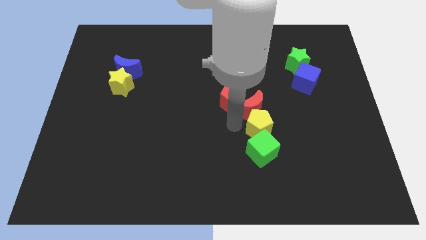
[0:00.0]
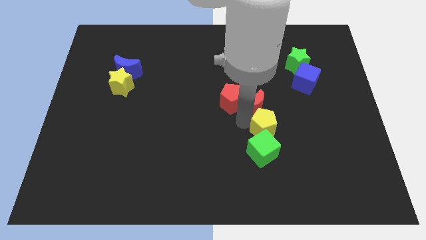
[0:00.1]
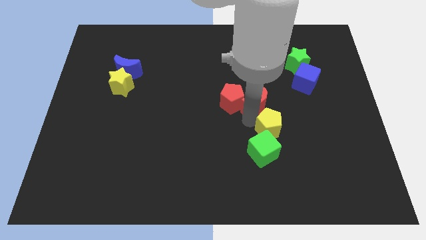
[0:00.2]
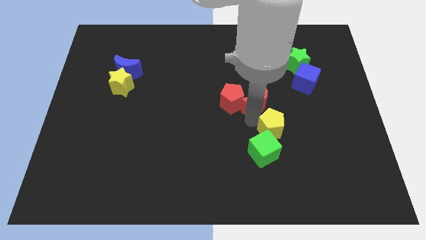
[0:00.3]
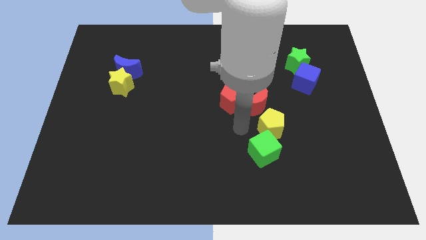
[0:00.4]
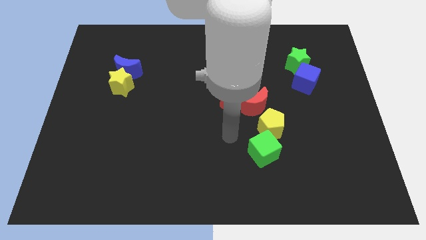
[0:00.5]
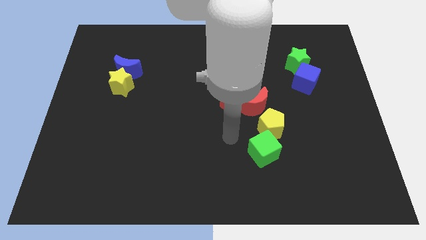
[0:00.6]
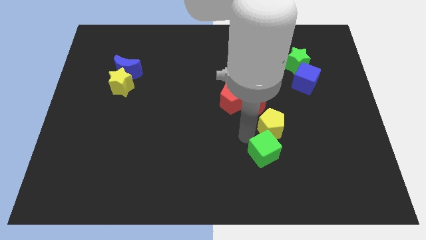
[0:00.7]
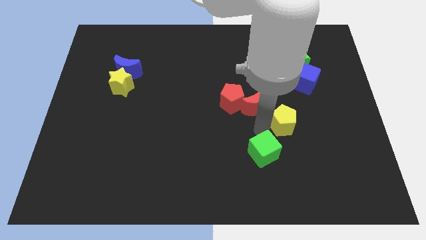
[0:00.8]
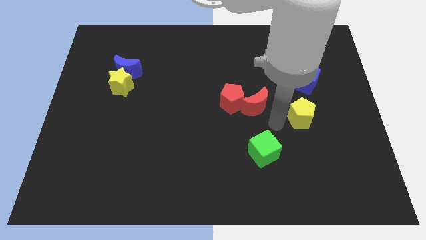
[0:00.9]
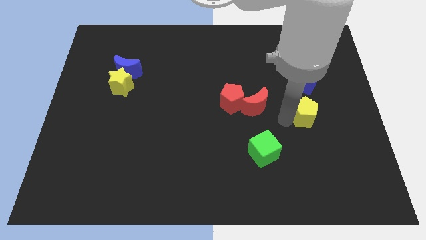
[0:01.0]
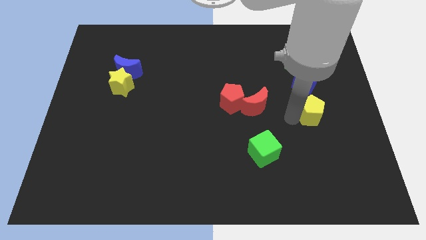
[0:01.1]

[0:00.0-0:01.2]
separate the yellow pentagon from the green cube

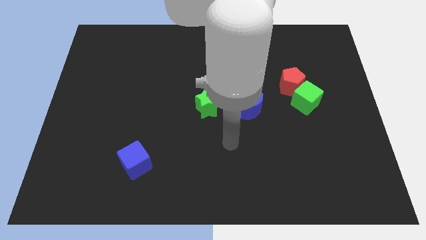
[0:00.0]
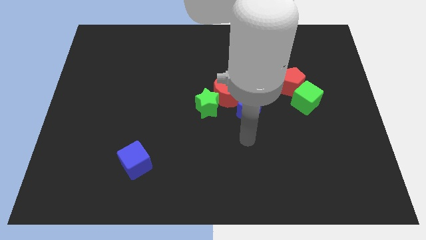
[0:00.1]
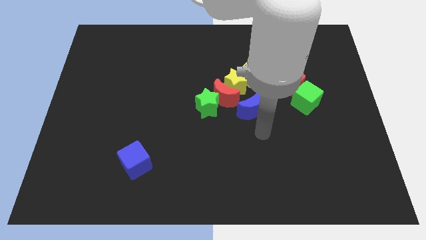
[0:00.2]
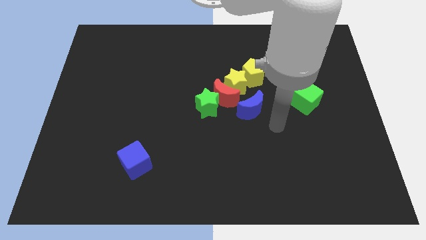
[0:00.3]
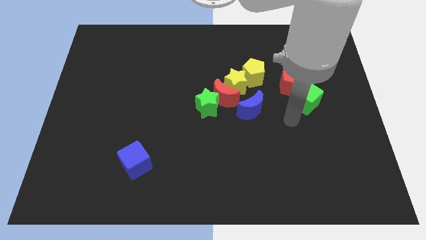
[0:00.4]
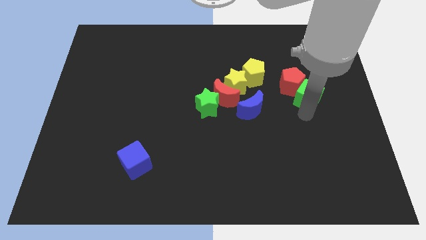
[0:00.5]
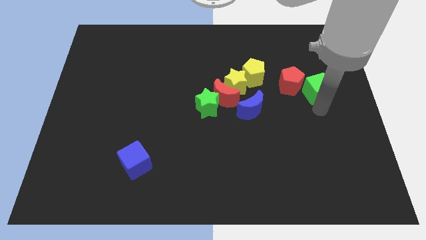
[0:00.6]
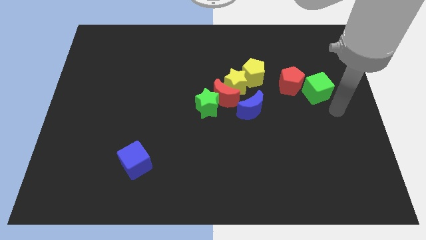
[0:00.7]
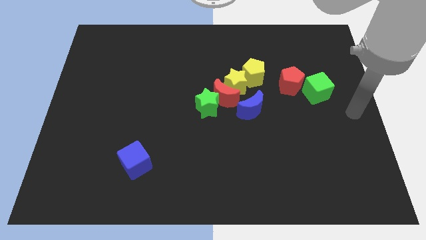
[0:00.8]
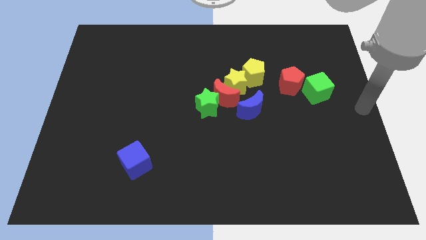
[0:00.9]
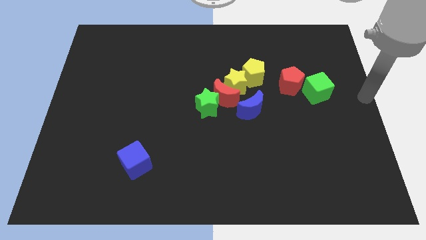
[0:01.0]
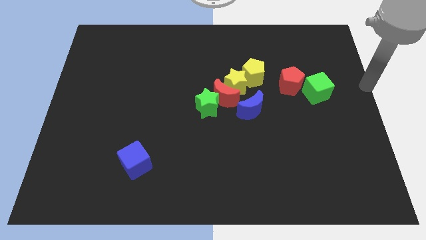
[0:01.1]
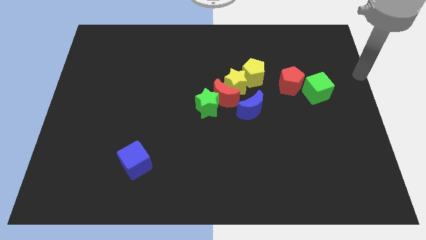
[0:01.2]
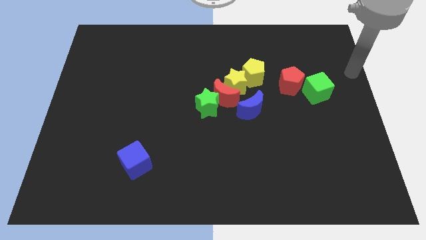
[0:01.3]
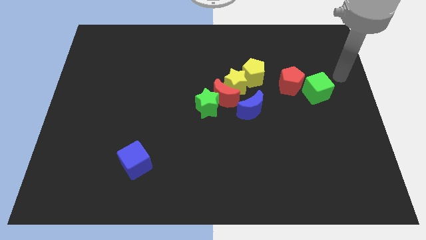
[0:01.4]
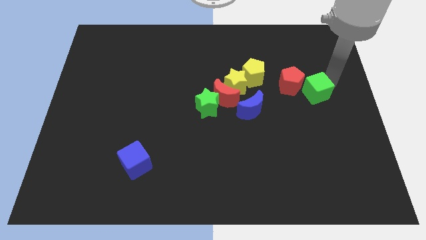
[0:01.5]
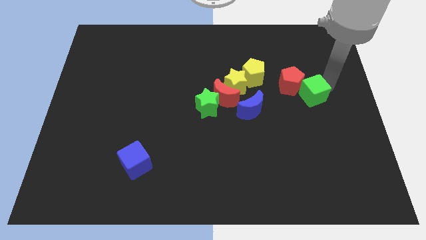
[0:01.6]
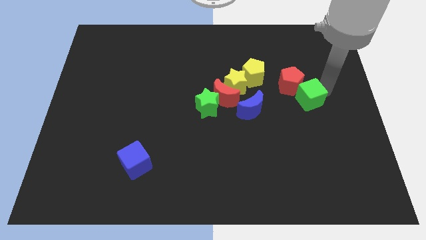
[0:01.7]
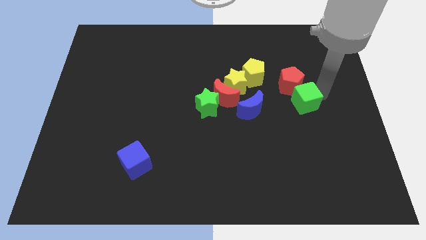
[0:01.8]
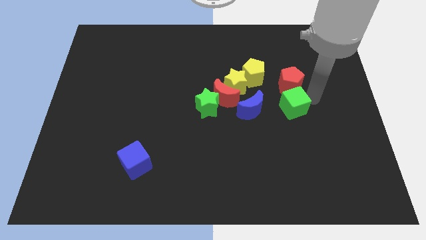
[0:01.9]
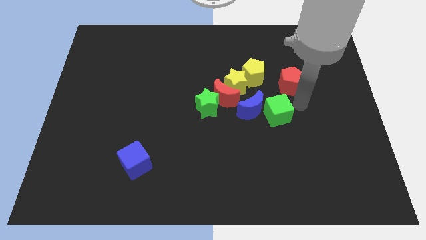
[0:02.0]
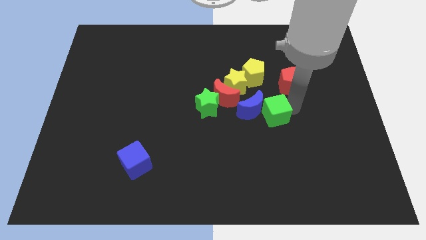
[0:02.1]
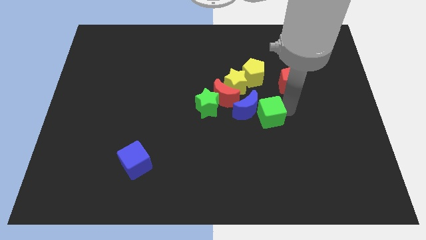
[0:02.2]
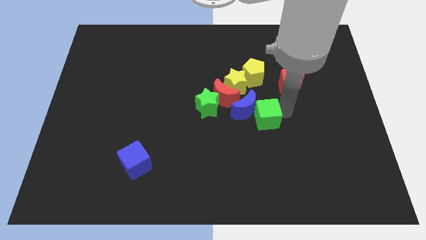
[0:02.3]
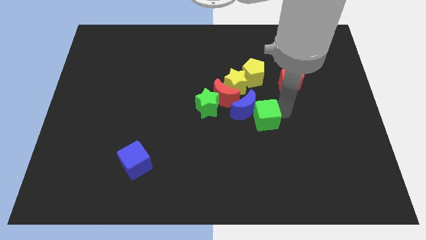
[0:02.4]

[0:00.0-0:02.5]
push the green cube into the blue crescent

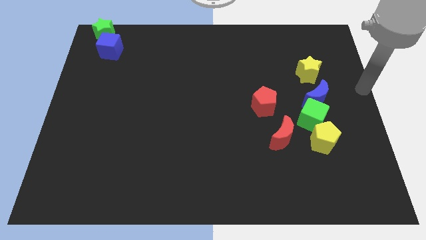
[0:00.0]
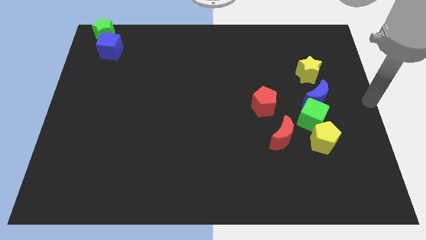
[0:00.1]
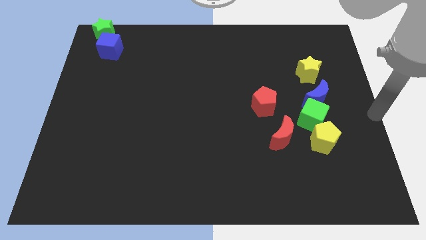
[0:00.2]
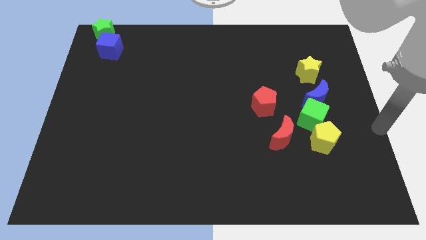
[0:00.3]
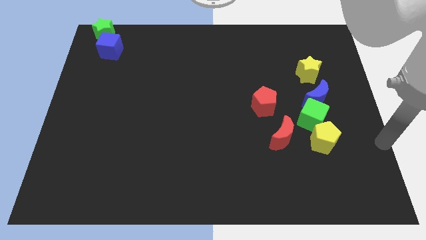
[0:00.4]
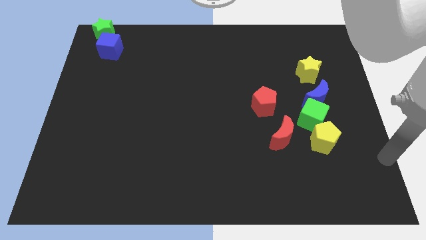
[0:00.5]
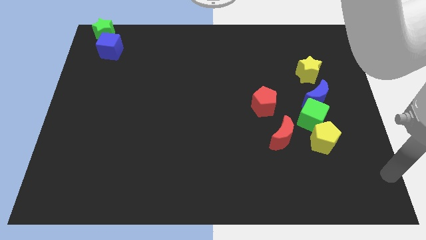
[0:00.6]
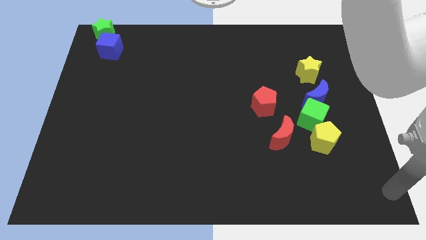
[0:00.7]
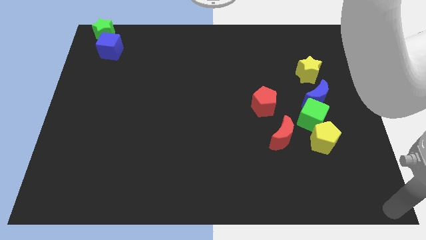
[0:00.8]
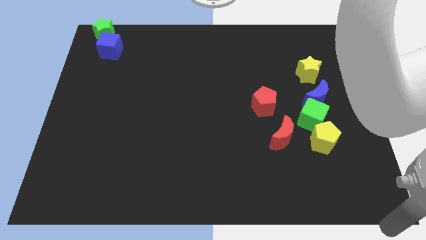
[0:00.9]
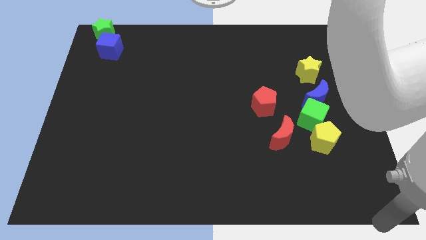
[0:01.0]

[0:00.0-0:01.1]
place arm at bottom right corner

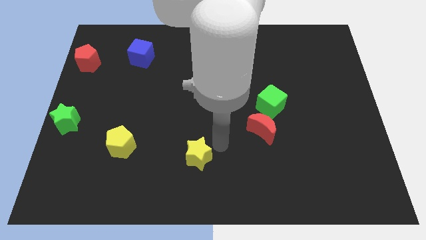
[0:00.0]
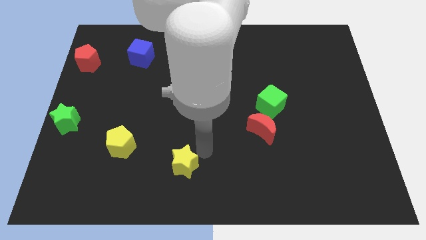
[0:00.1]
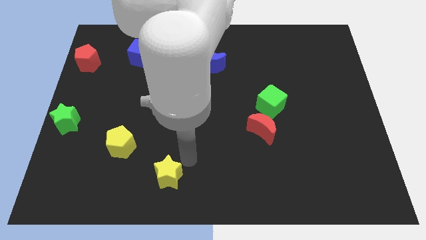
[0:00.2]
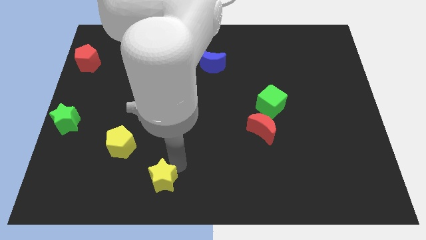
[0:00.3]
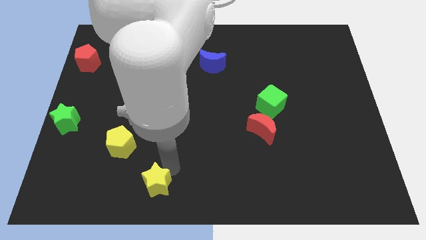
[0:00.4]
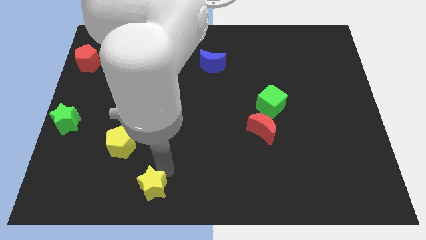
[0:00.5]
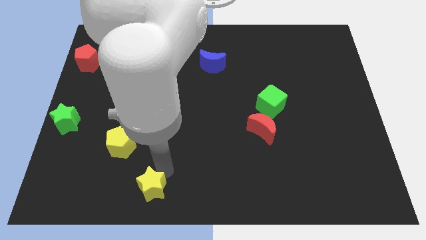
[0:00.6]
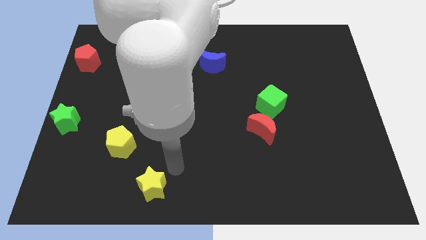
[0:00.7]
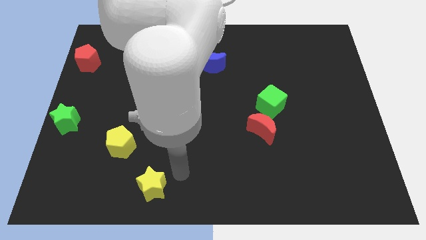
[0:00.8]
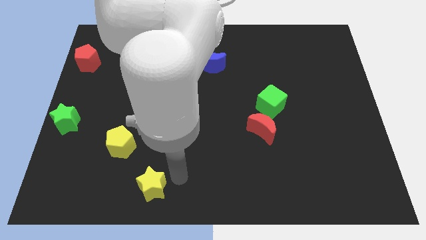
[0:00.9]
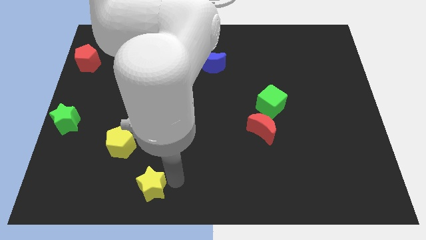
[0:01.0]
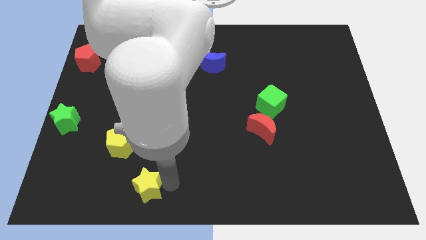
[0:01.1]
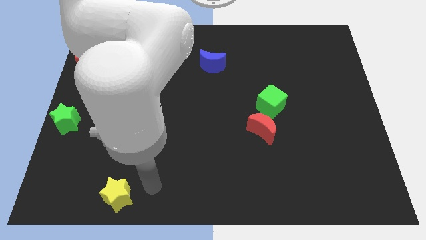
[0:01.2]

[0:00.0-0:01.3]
push the yellow star below the yellow pentagon

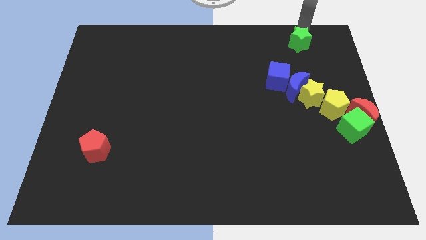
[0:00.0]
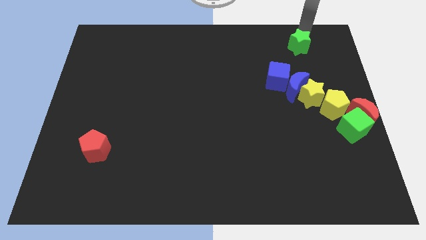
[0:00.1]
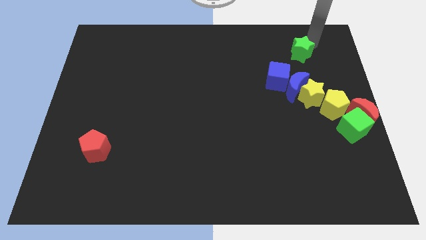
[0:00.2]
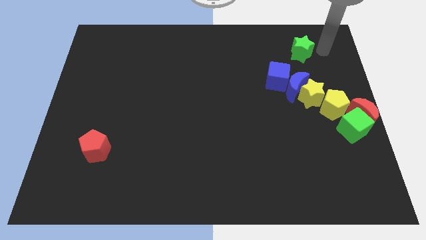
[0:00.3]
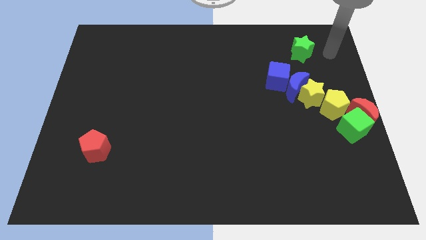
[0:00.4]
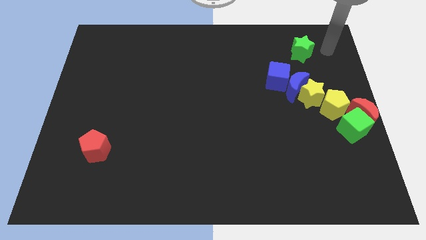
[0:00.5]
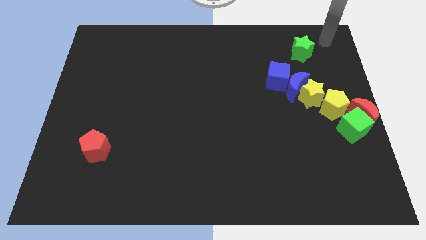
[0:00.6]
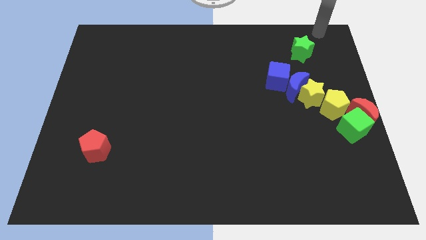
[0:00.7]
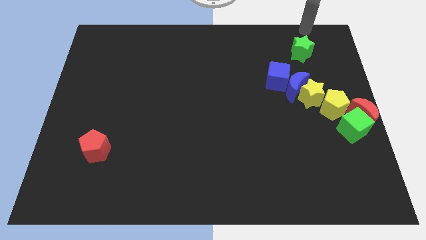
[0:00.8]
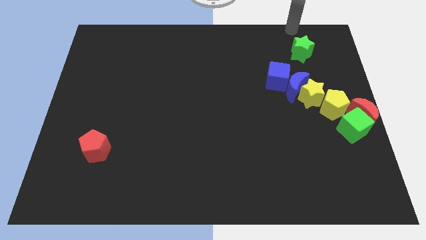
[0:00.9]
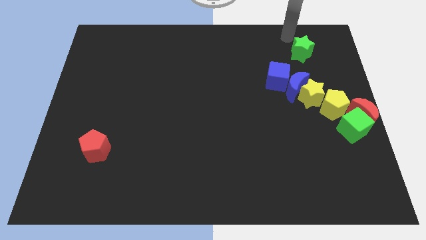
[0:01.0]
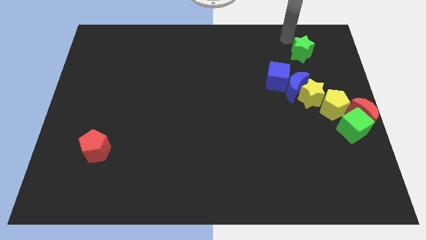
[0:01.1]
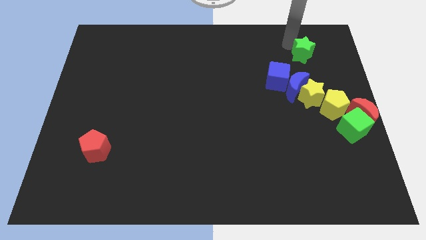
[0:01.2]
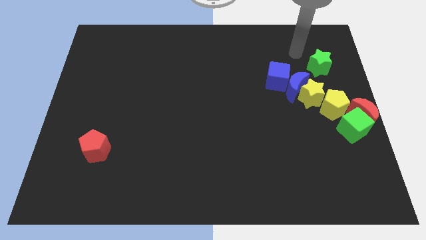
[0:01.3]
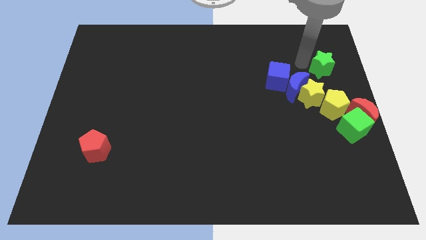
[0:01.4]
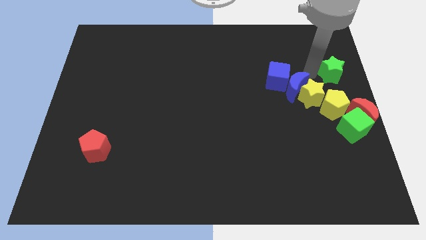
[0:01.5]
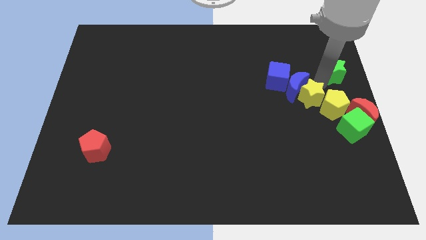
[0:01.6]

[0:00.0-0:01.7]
move the green star vertically to the top of the yellow pentagon

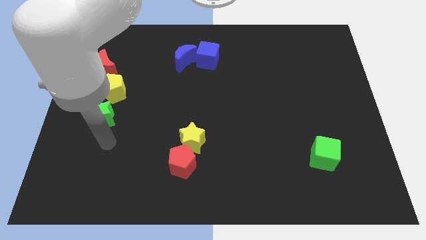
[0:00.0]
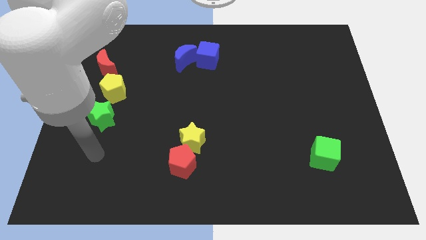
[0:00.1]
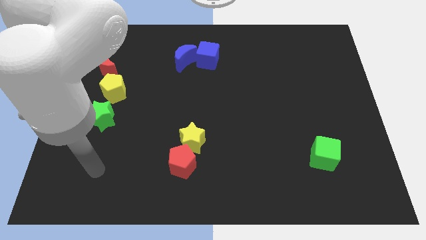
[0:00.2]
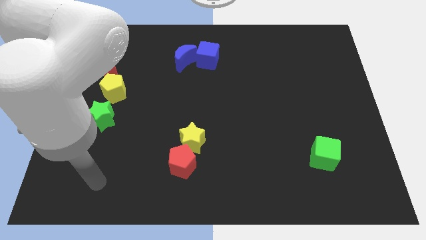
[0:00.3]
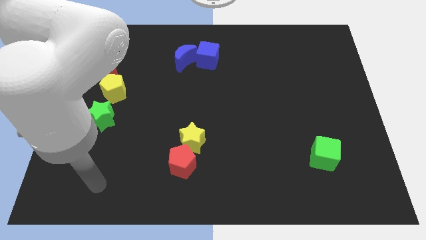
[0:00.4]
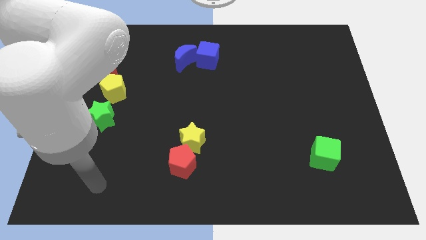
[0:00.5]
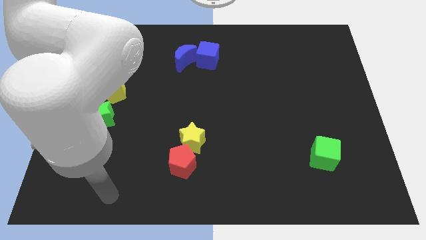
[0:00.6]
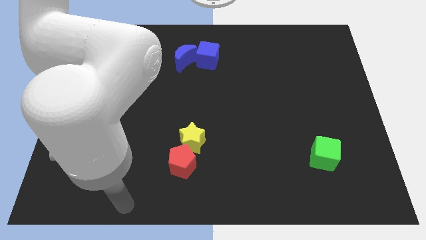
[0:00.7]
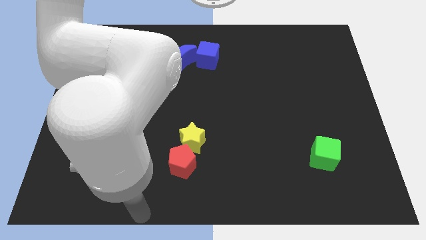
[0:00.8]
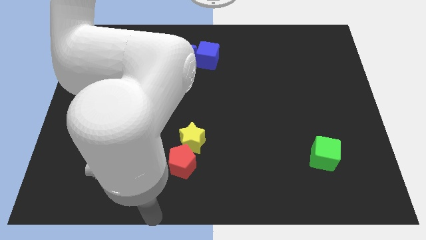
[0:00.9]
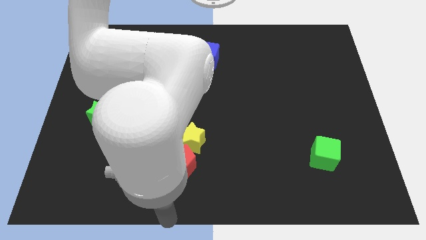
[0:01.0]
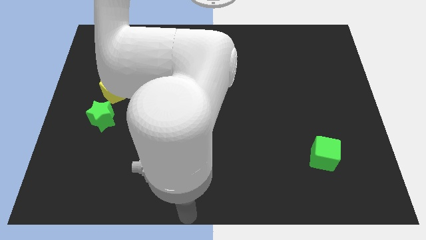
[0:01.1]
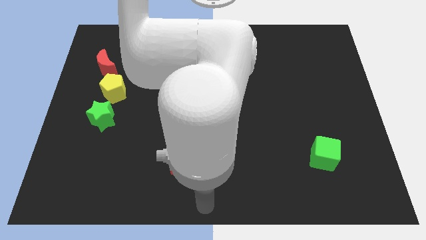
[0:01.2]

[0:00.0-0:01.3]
move your hand to the bottom center
